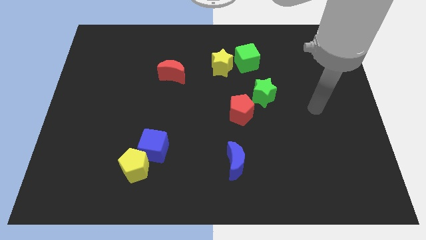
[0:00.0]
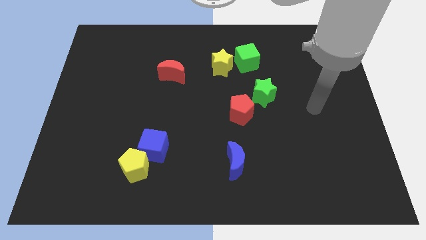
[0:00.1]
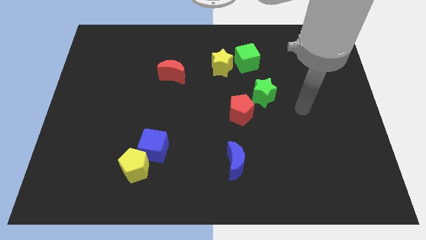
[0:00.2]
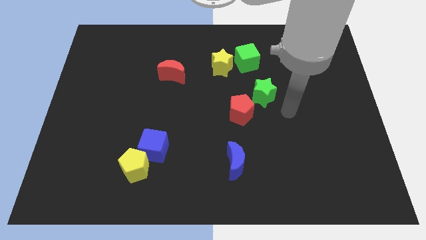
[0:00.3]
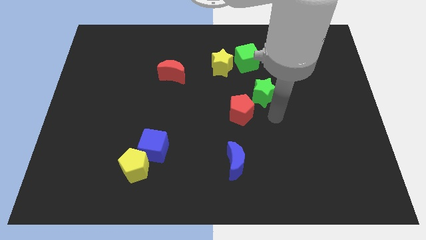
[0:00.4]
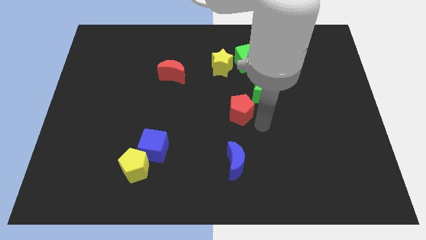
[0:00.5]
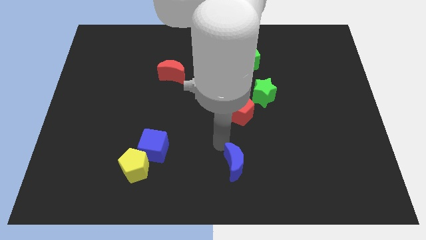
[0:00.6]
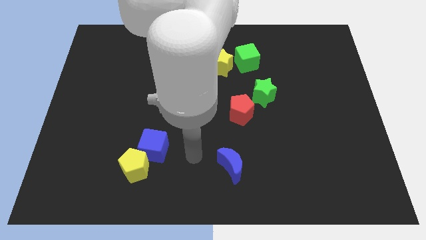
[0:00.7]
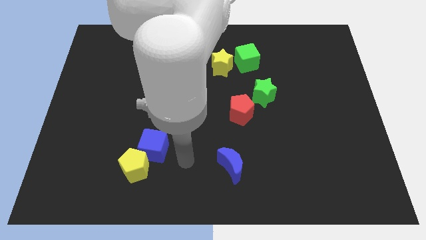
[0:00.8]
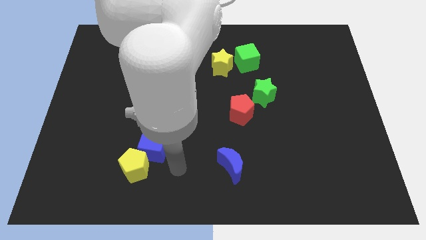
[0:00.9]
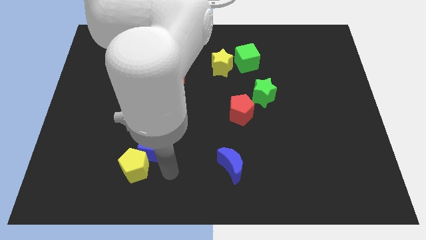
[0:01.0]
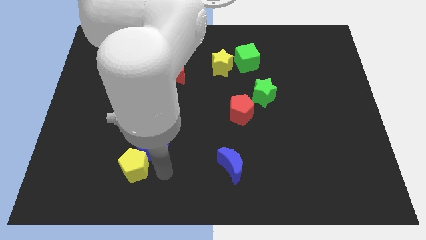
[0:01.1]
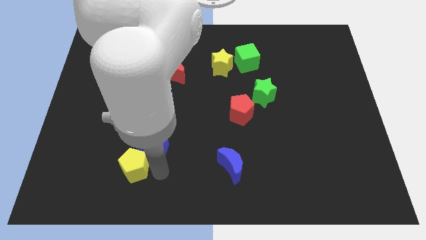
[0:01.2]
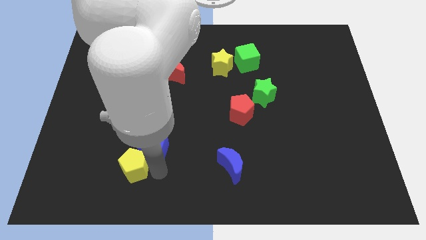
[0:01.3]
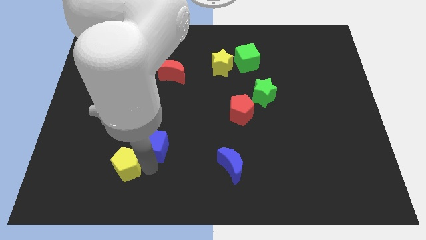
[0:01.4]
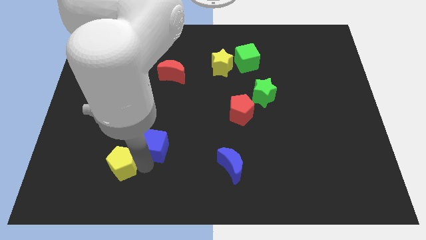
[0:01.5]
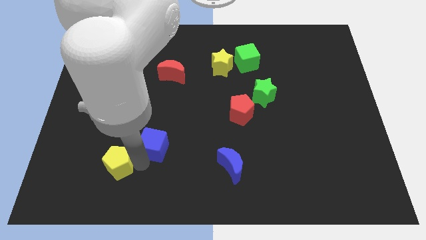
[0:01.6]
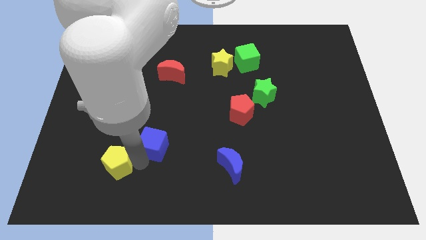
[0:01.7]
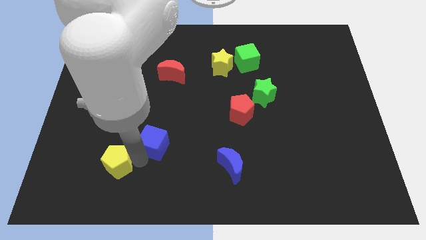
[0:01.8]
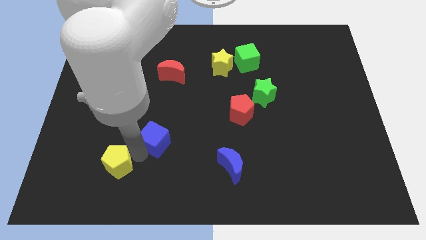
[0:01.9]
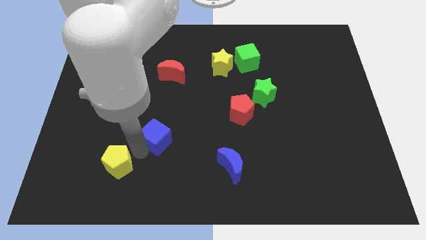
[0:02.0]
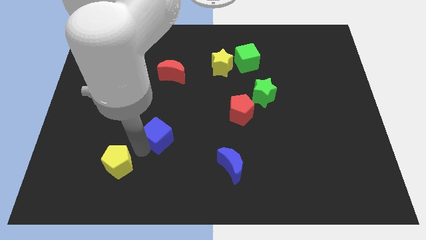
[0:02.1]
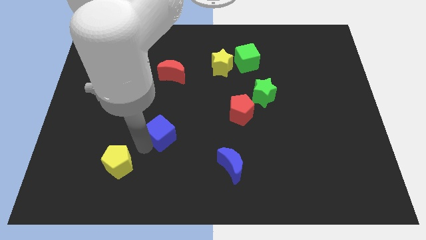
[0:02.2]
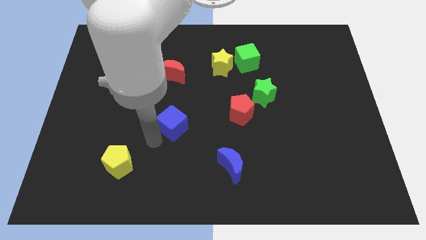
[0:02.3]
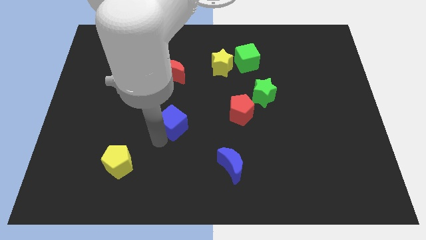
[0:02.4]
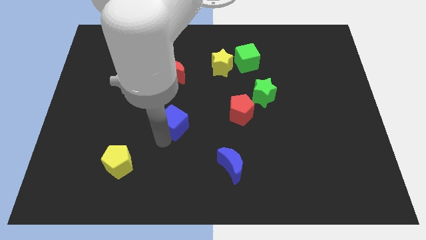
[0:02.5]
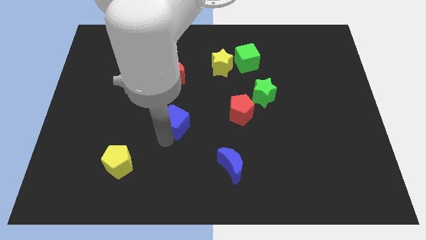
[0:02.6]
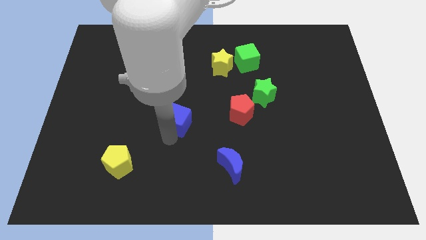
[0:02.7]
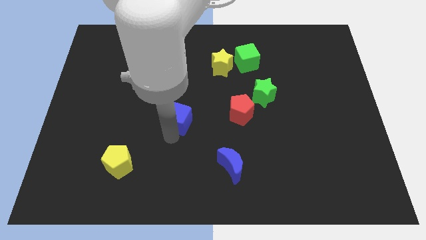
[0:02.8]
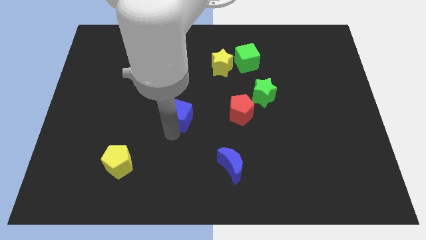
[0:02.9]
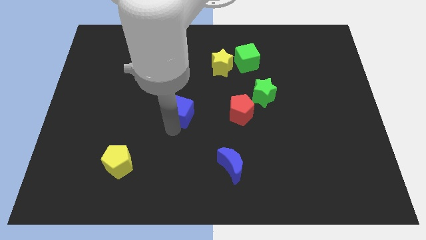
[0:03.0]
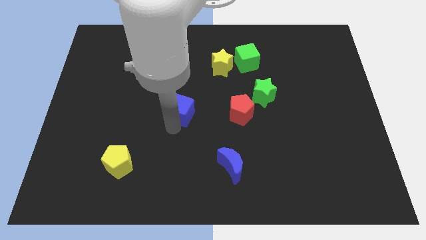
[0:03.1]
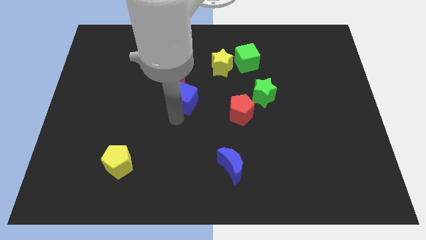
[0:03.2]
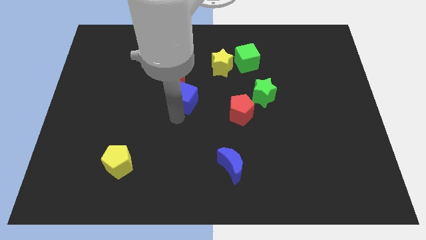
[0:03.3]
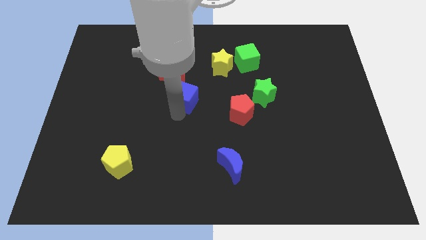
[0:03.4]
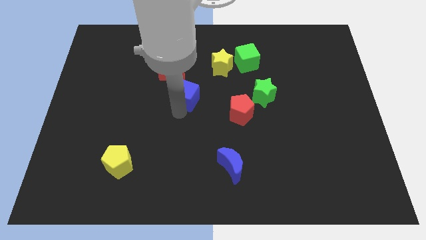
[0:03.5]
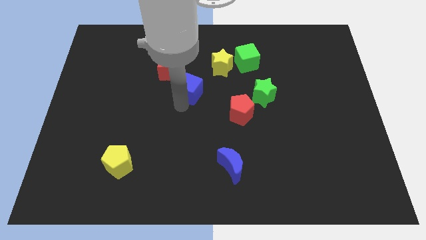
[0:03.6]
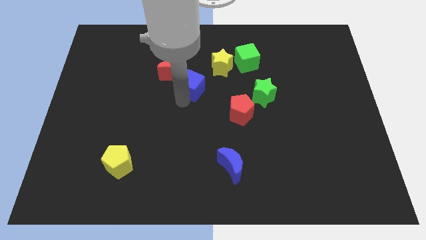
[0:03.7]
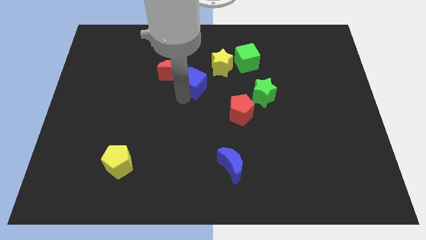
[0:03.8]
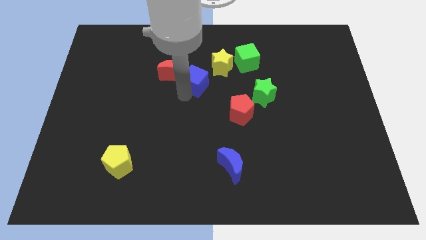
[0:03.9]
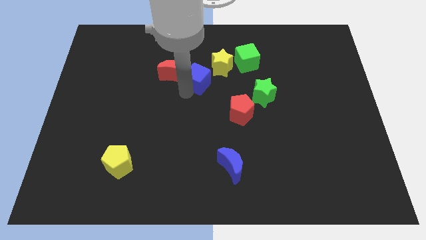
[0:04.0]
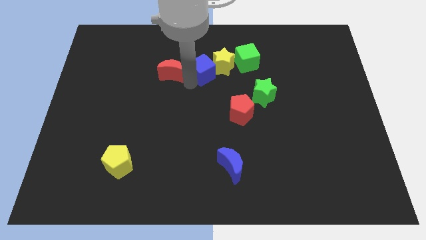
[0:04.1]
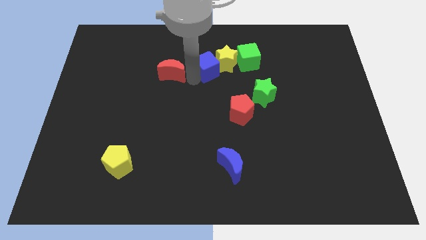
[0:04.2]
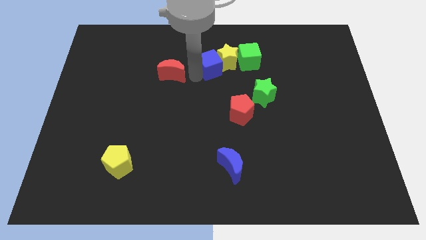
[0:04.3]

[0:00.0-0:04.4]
put the blue cube to the yellow star

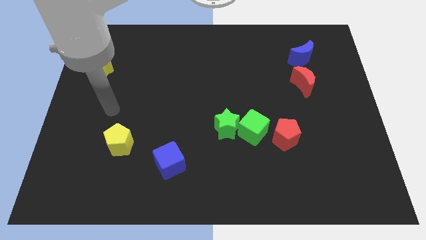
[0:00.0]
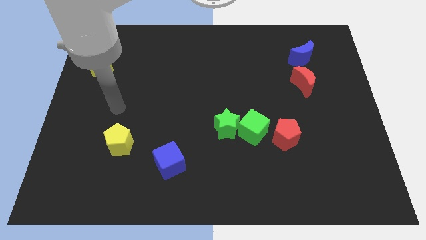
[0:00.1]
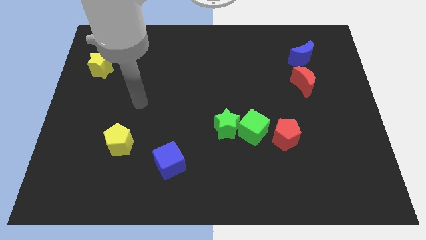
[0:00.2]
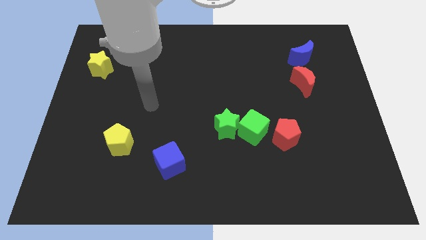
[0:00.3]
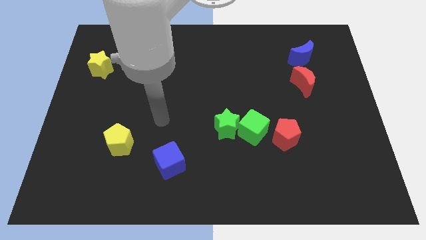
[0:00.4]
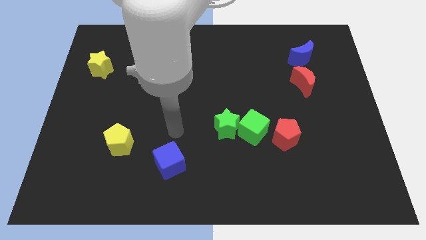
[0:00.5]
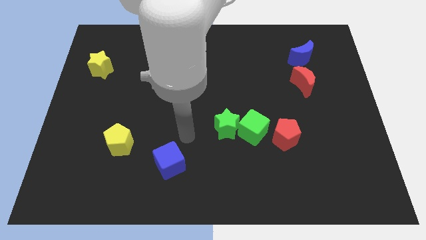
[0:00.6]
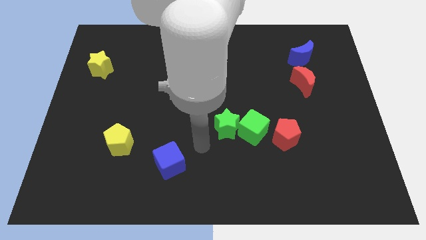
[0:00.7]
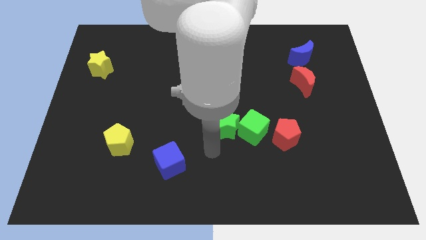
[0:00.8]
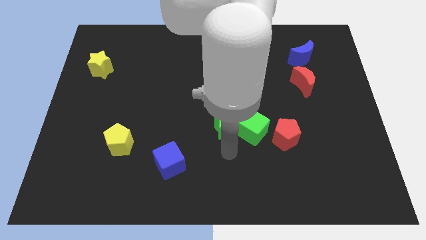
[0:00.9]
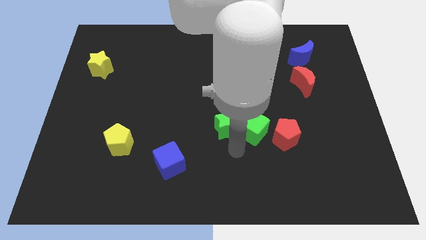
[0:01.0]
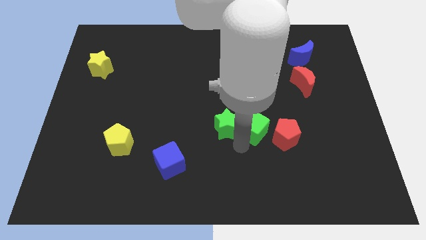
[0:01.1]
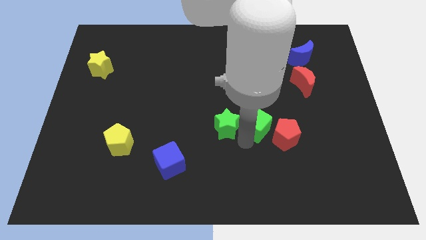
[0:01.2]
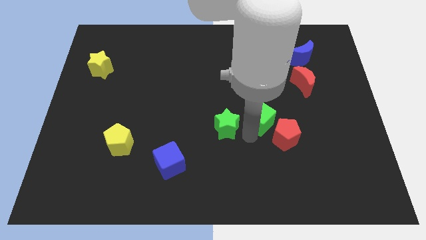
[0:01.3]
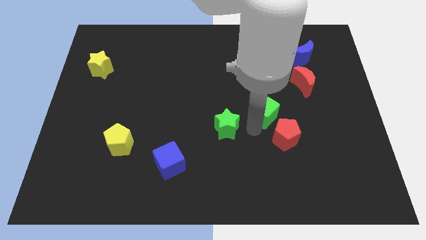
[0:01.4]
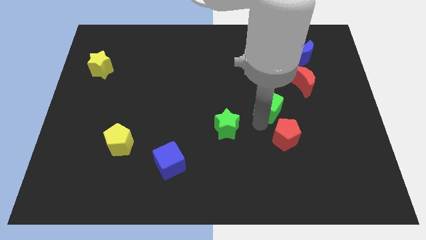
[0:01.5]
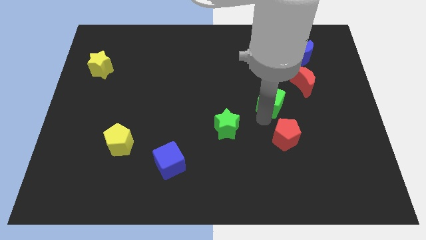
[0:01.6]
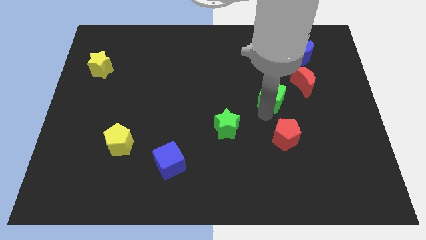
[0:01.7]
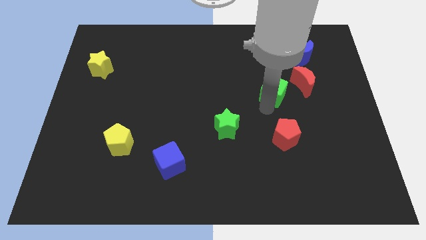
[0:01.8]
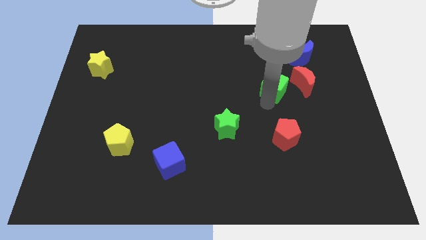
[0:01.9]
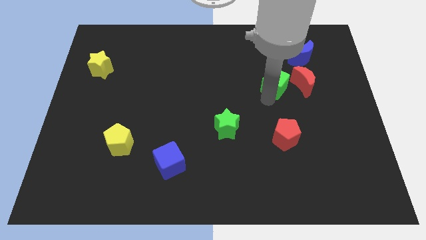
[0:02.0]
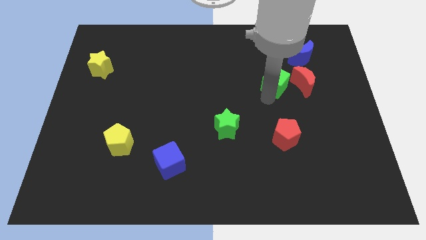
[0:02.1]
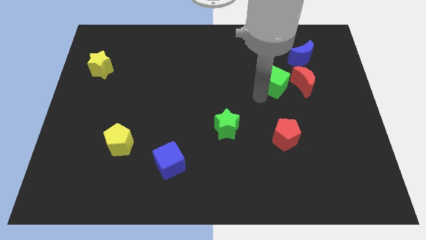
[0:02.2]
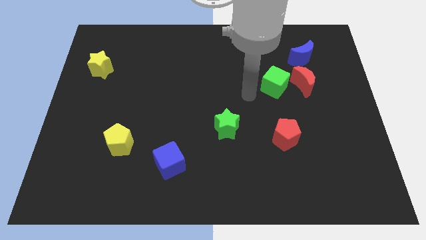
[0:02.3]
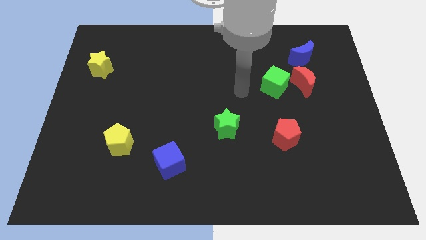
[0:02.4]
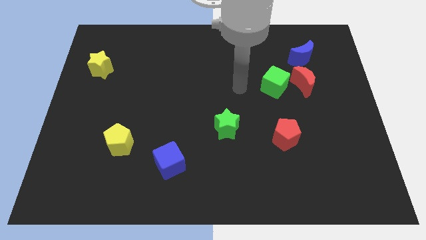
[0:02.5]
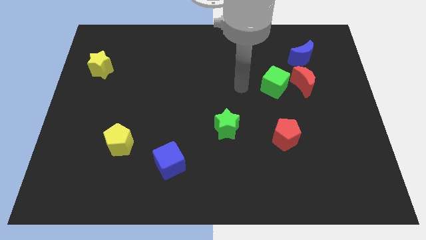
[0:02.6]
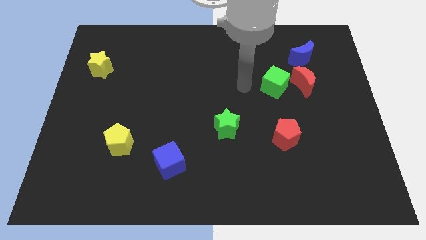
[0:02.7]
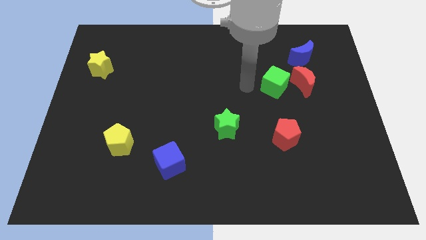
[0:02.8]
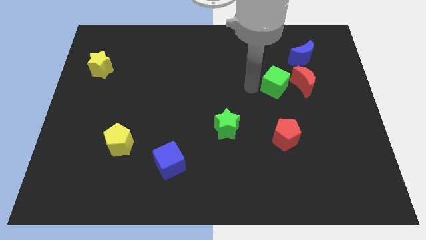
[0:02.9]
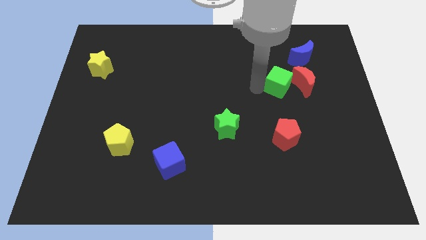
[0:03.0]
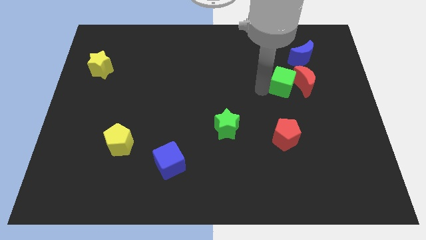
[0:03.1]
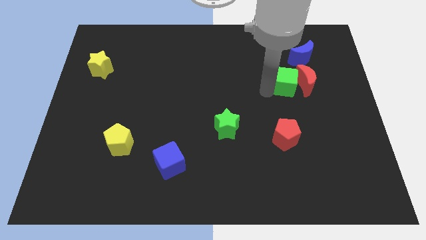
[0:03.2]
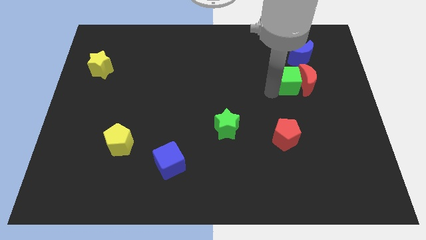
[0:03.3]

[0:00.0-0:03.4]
push the green cube towards the red moon

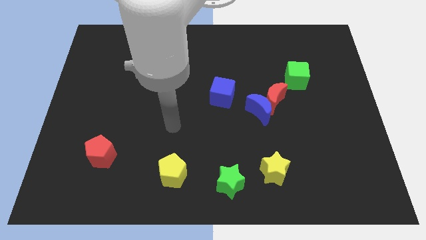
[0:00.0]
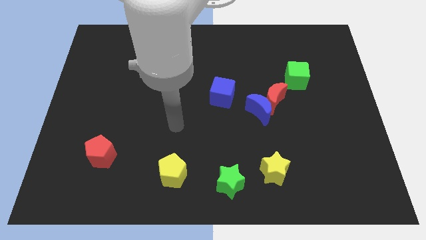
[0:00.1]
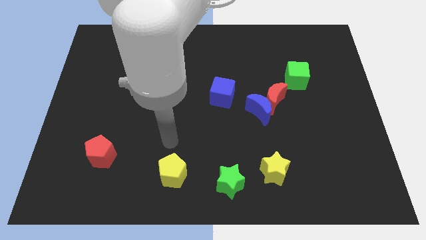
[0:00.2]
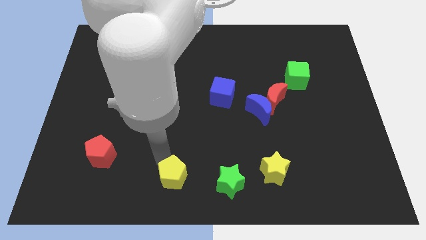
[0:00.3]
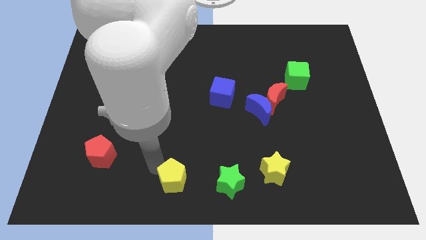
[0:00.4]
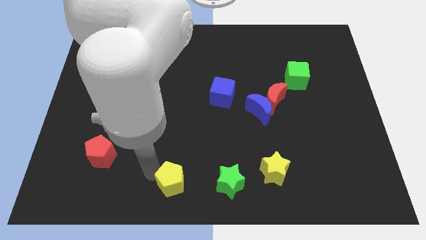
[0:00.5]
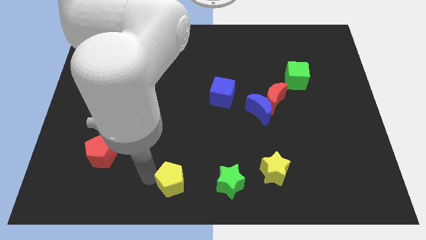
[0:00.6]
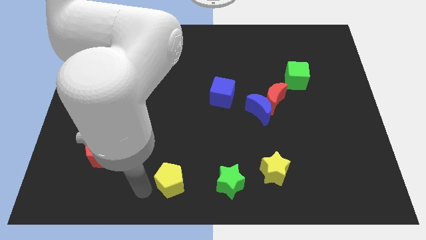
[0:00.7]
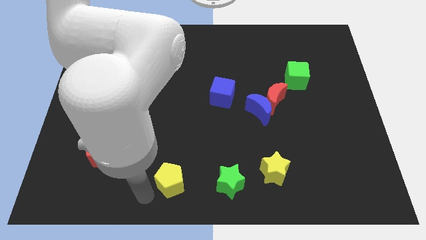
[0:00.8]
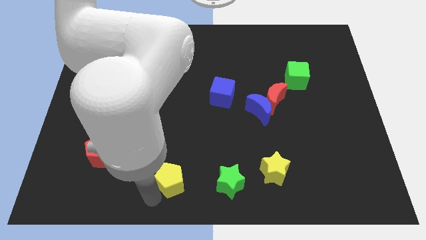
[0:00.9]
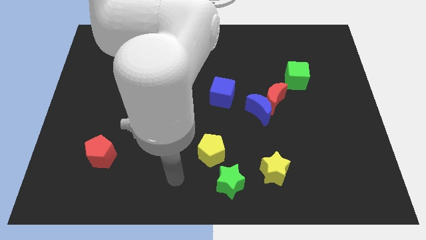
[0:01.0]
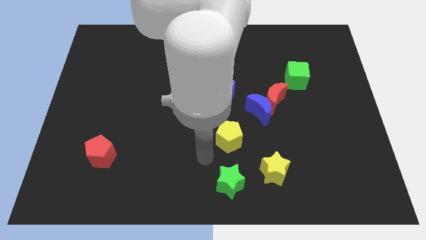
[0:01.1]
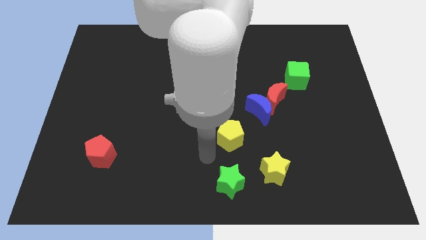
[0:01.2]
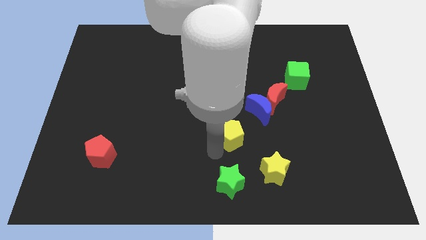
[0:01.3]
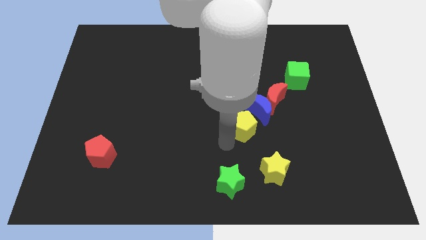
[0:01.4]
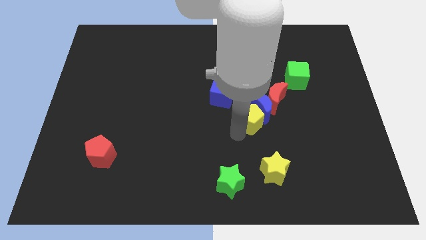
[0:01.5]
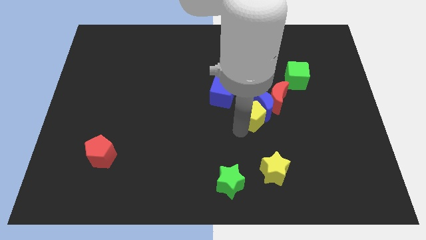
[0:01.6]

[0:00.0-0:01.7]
slide the yellow pentagon to the blue moon
